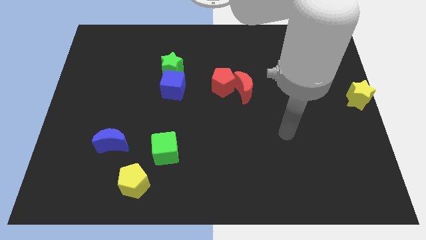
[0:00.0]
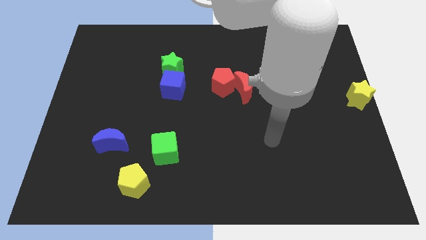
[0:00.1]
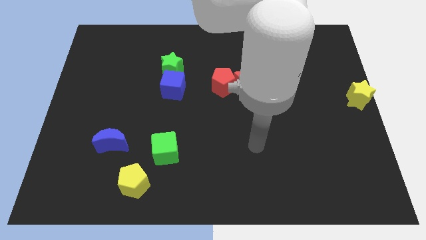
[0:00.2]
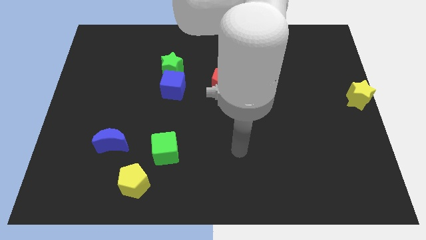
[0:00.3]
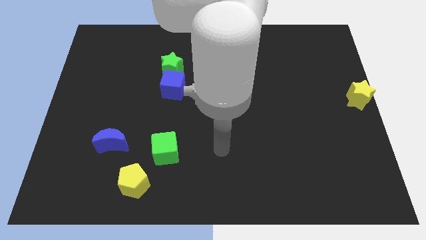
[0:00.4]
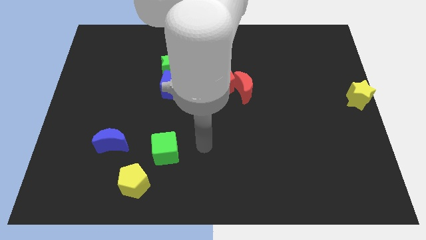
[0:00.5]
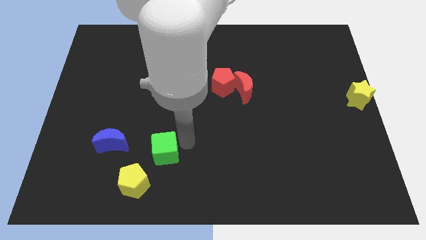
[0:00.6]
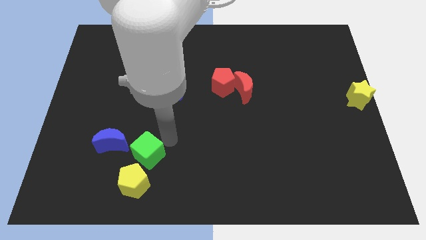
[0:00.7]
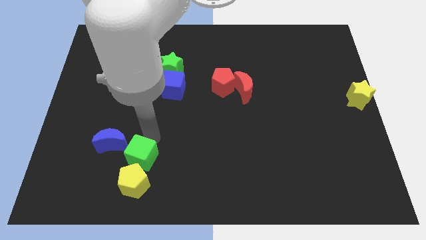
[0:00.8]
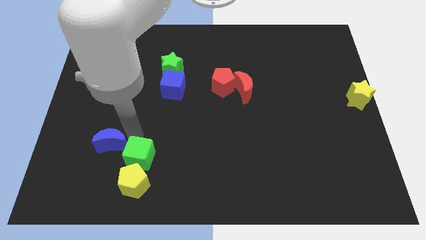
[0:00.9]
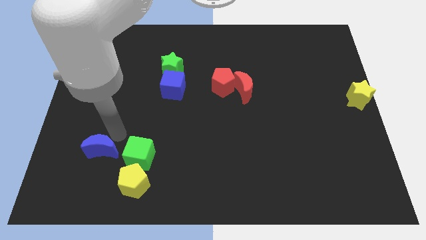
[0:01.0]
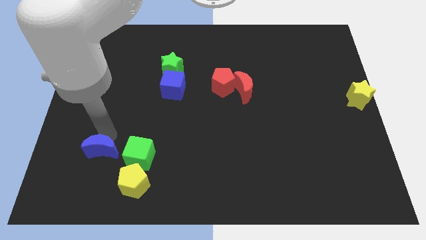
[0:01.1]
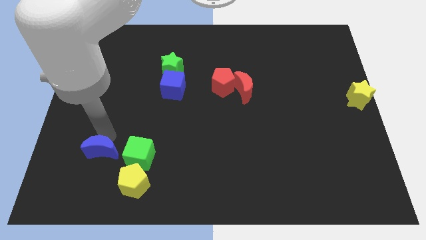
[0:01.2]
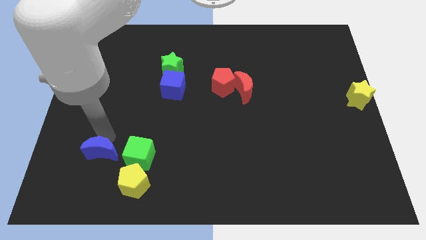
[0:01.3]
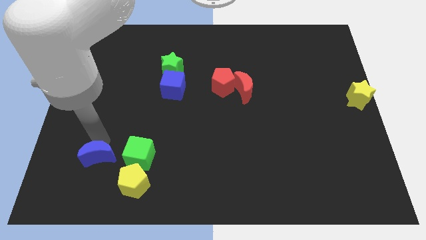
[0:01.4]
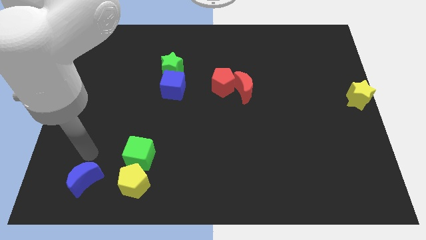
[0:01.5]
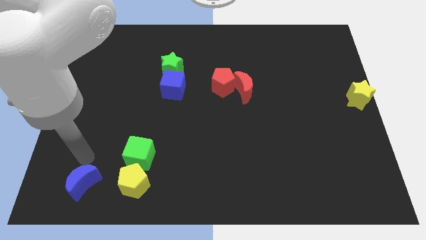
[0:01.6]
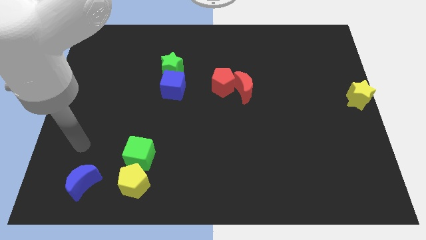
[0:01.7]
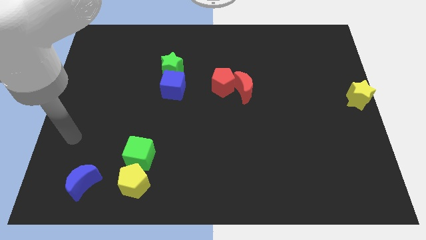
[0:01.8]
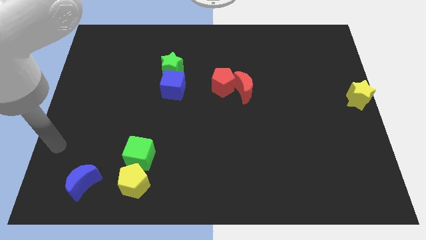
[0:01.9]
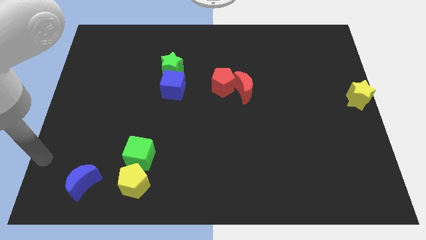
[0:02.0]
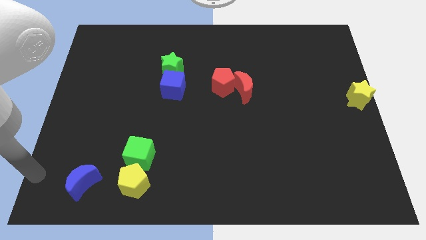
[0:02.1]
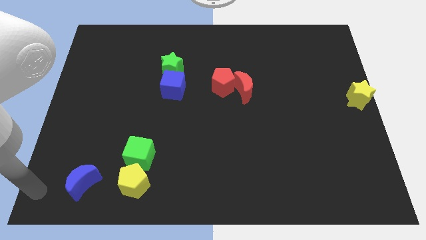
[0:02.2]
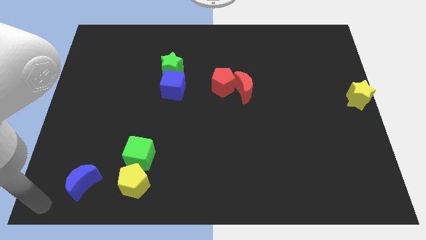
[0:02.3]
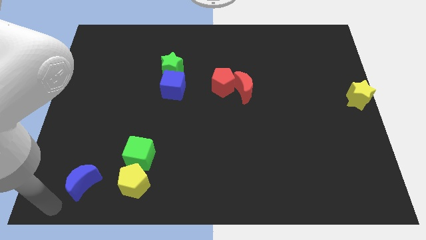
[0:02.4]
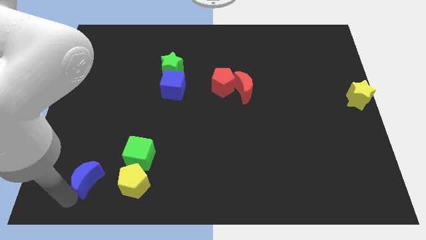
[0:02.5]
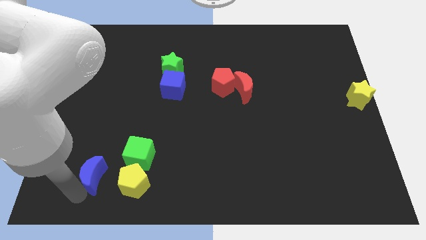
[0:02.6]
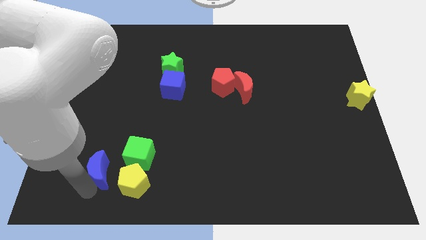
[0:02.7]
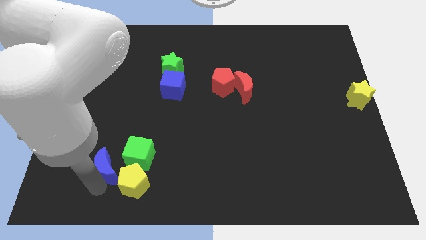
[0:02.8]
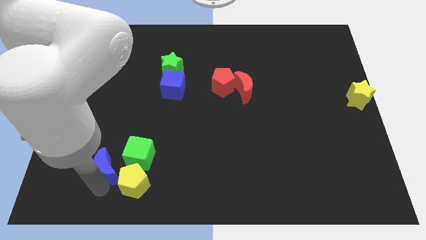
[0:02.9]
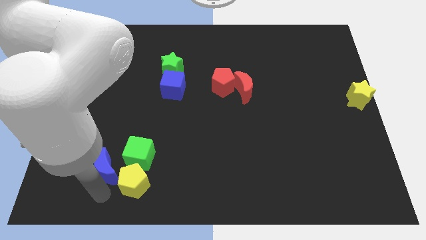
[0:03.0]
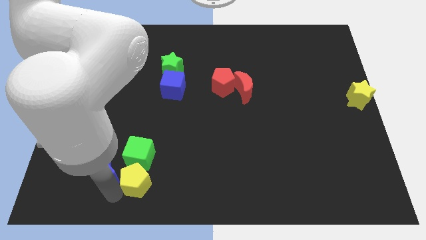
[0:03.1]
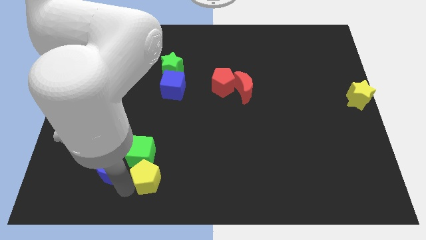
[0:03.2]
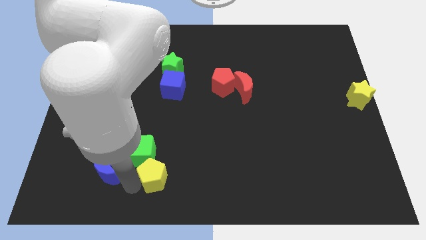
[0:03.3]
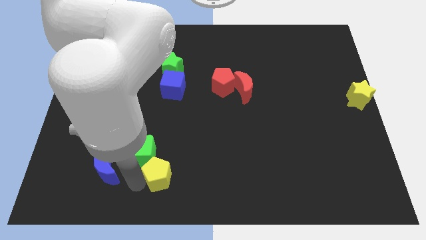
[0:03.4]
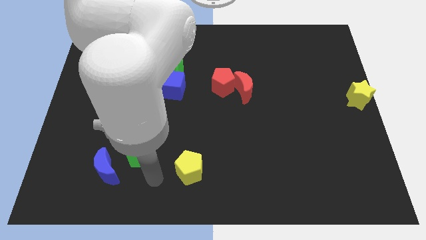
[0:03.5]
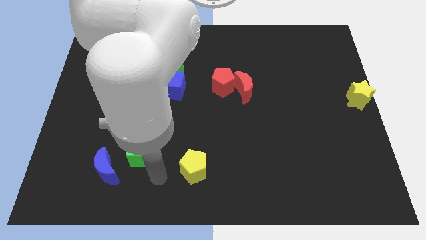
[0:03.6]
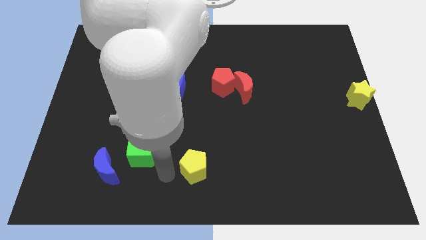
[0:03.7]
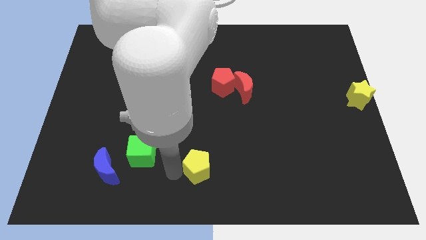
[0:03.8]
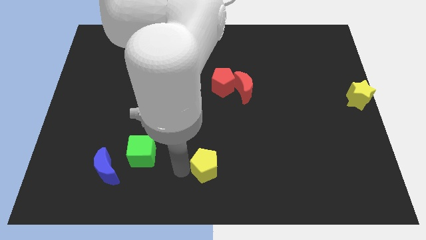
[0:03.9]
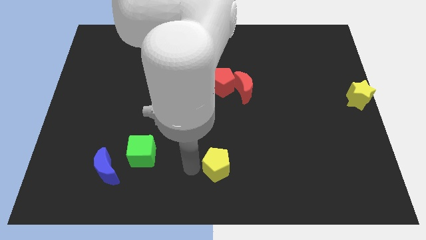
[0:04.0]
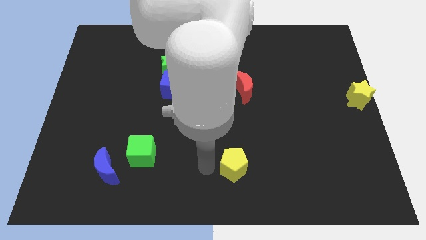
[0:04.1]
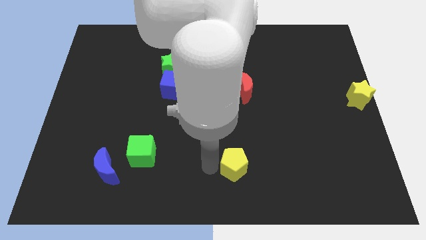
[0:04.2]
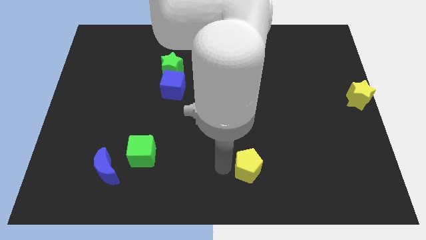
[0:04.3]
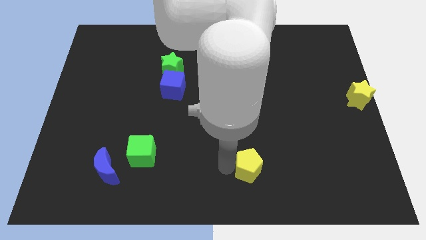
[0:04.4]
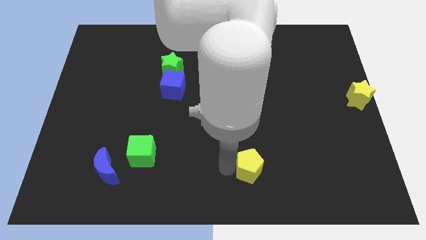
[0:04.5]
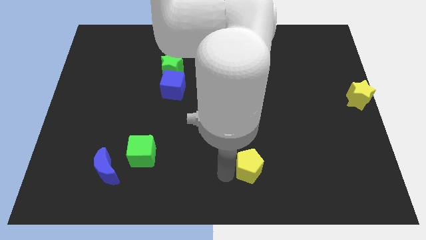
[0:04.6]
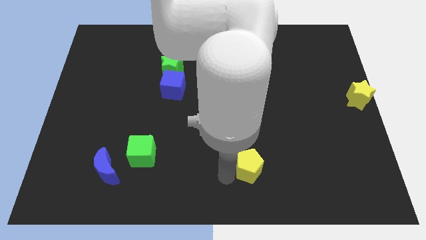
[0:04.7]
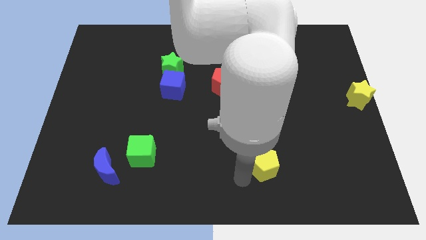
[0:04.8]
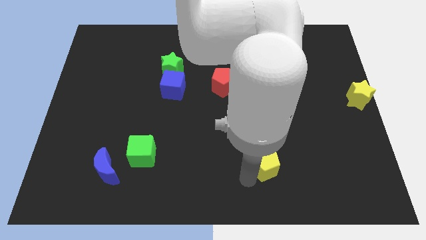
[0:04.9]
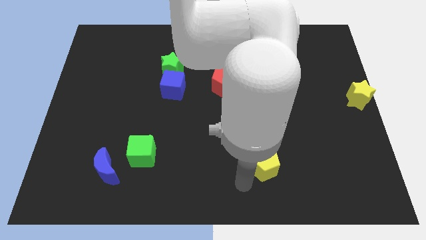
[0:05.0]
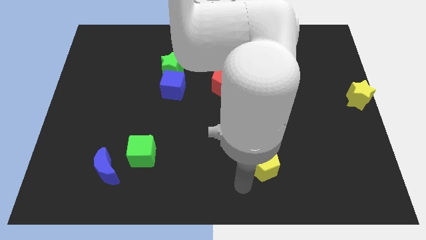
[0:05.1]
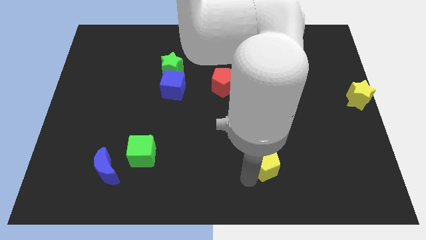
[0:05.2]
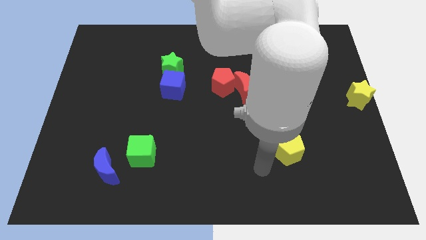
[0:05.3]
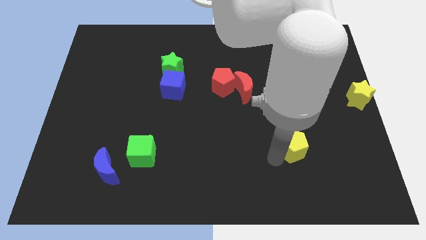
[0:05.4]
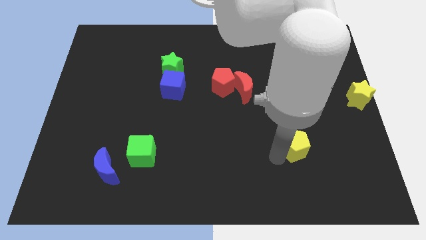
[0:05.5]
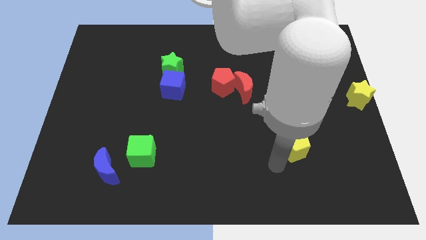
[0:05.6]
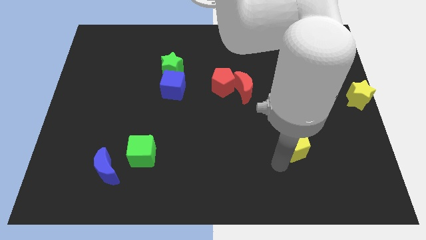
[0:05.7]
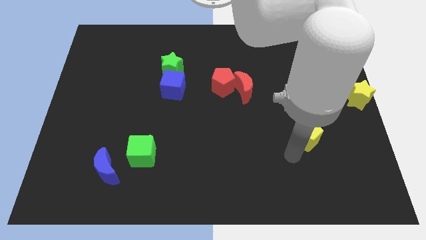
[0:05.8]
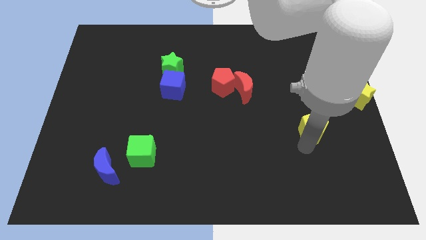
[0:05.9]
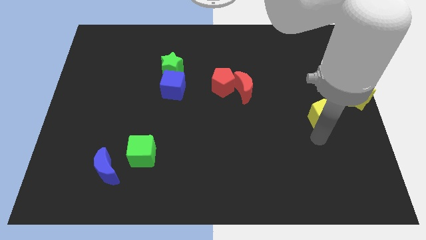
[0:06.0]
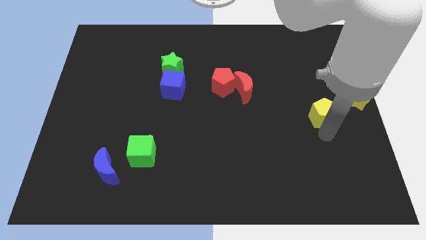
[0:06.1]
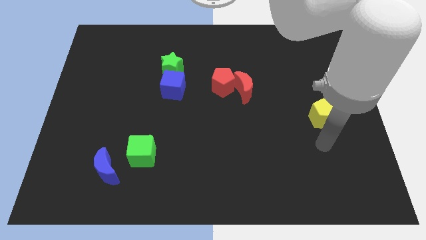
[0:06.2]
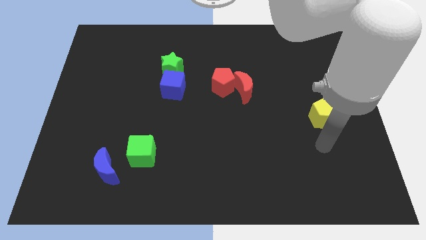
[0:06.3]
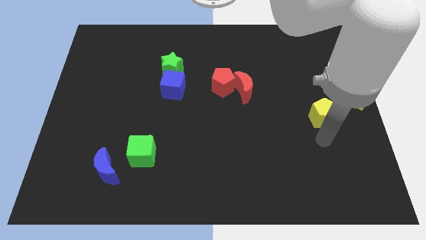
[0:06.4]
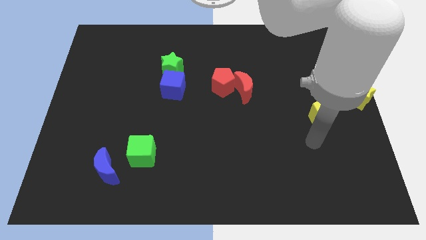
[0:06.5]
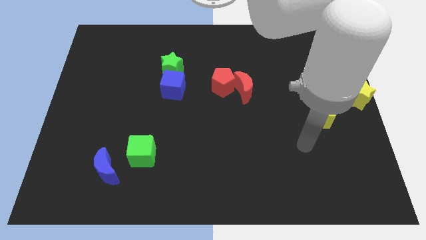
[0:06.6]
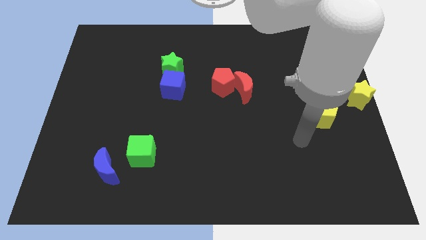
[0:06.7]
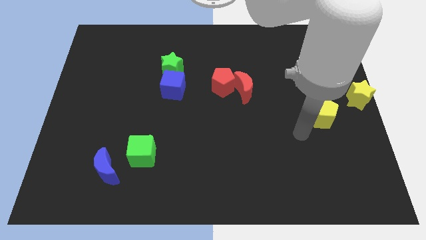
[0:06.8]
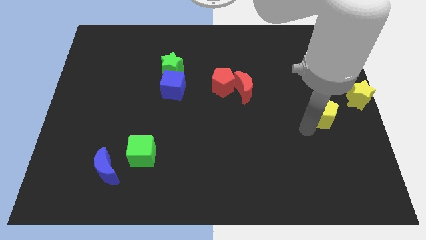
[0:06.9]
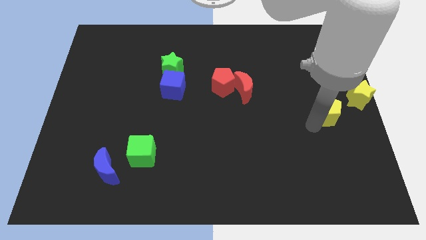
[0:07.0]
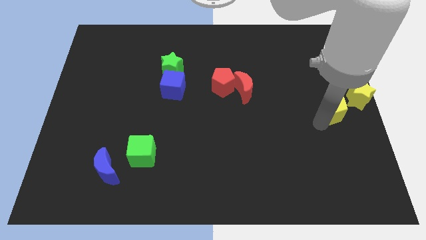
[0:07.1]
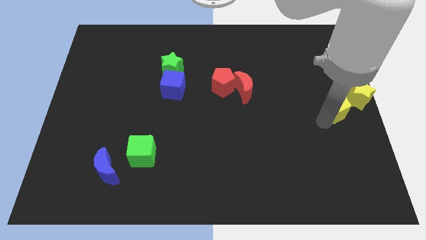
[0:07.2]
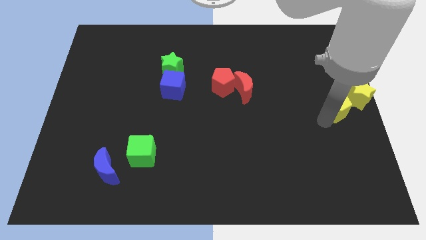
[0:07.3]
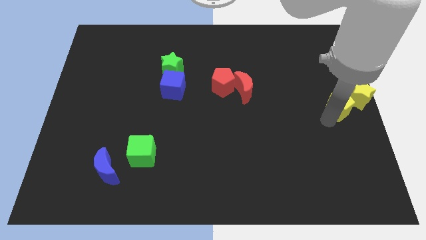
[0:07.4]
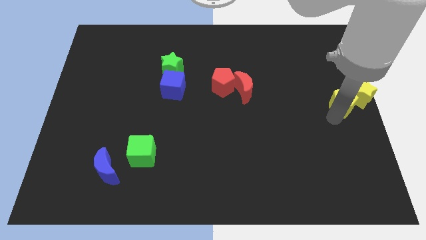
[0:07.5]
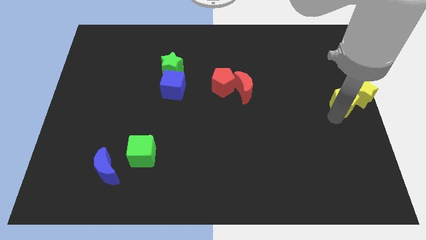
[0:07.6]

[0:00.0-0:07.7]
slide the yellow pentagon left below the yellow star

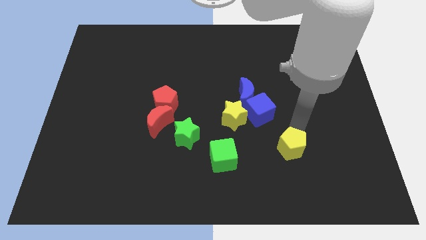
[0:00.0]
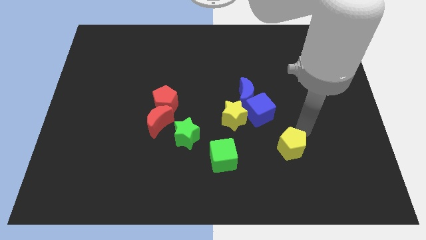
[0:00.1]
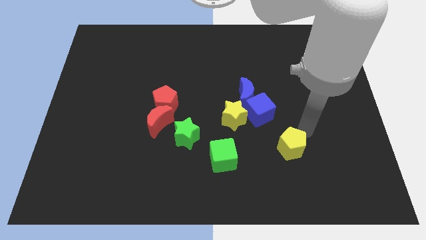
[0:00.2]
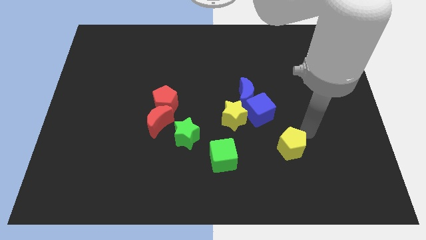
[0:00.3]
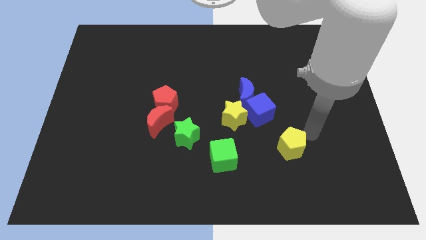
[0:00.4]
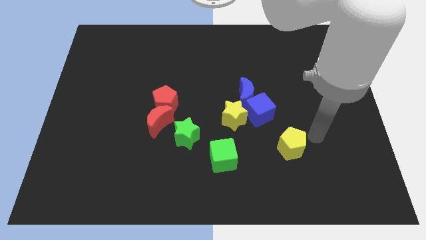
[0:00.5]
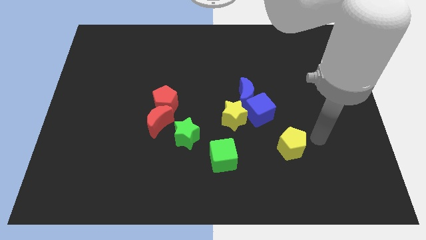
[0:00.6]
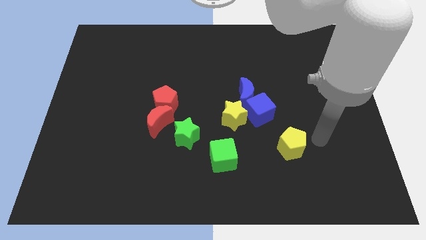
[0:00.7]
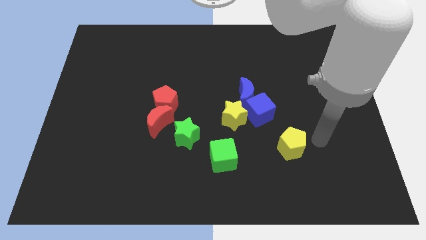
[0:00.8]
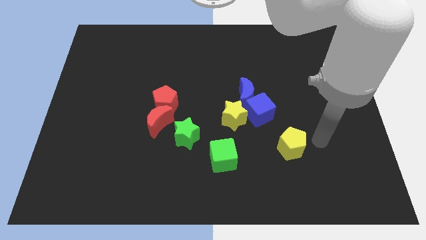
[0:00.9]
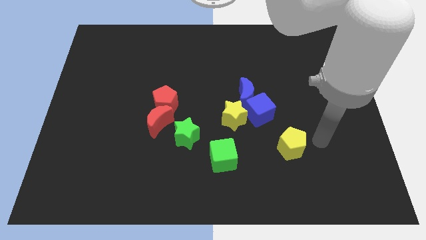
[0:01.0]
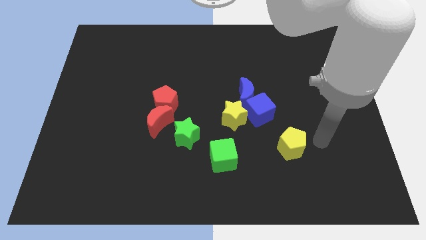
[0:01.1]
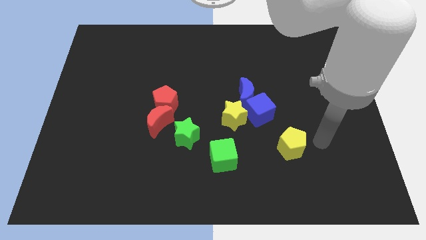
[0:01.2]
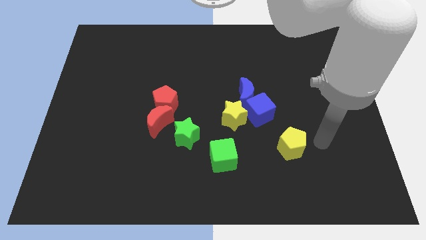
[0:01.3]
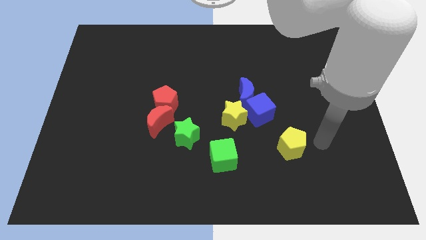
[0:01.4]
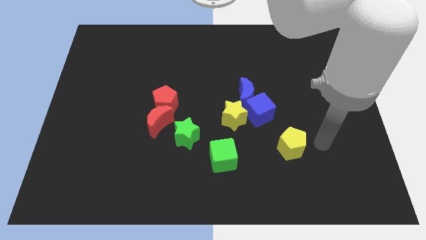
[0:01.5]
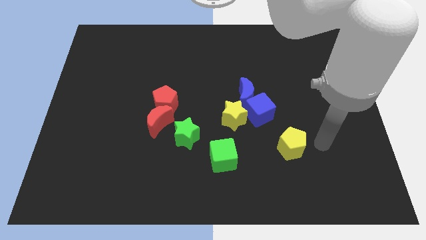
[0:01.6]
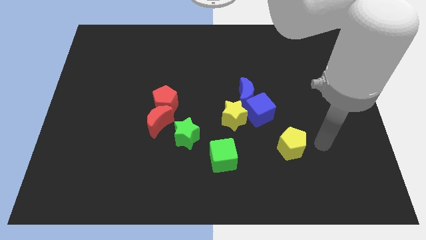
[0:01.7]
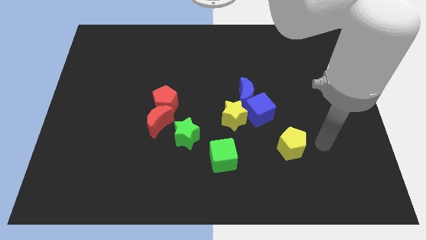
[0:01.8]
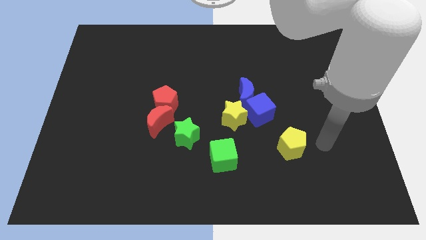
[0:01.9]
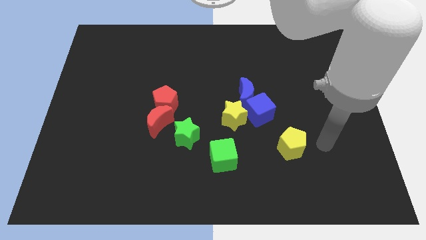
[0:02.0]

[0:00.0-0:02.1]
move the arm right to the yellow pentagon
